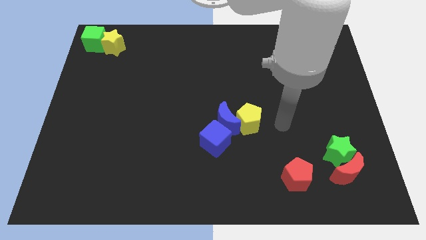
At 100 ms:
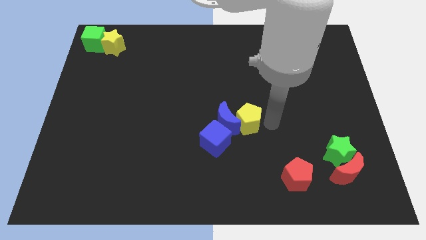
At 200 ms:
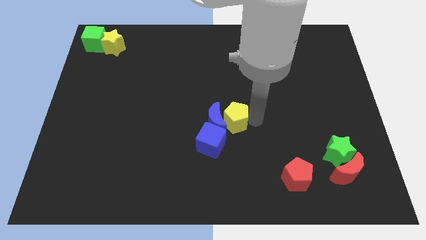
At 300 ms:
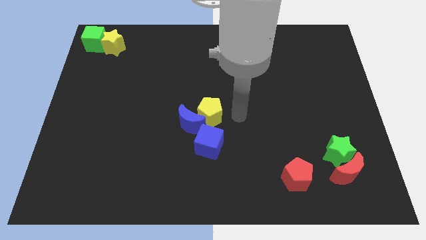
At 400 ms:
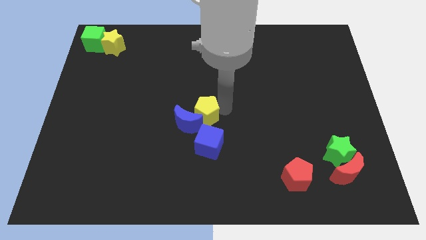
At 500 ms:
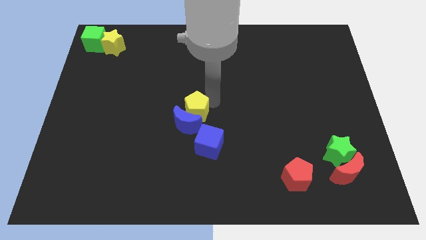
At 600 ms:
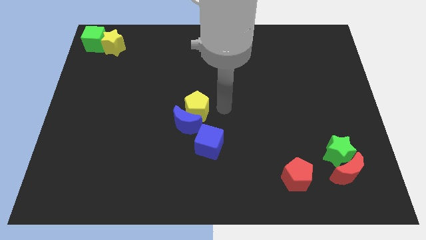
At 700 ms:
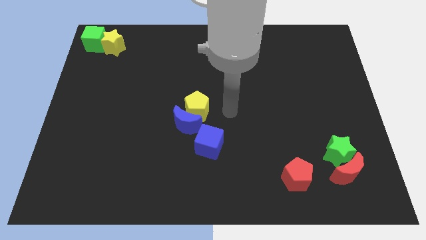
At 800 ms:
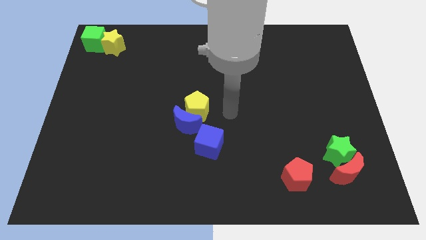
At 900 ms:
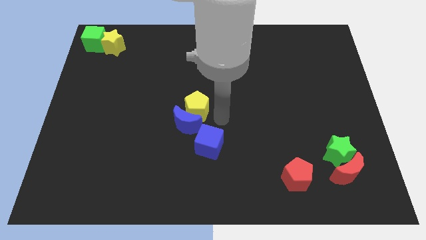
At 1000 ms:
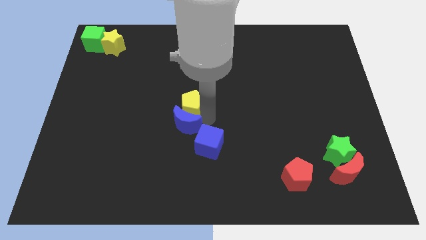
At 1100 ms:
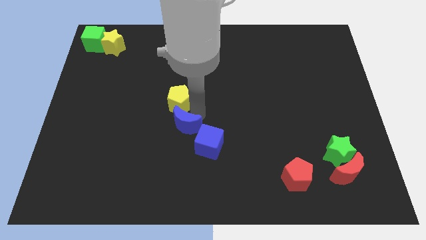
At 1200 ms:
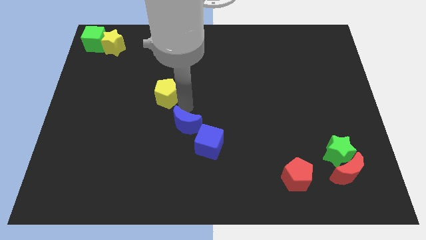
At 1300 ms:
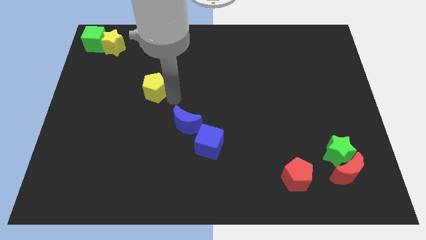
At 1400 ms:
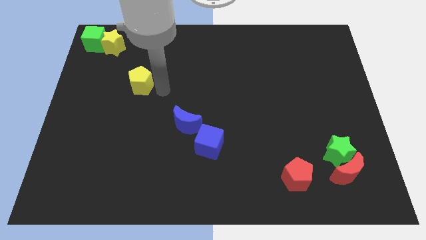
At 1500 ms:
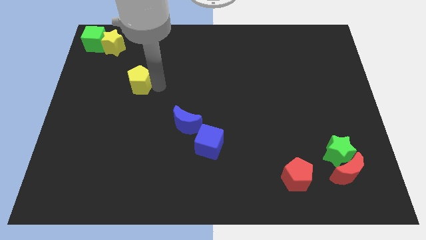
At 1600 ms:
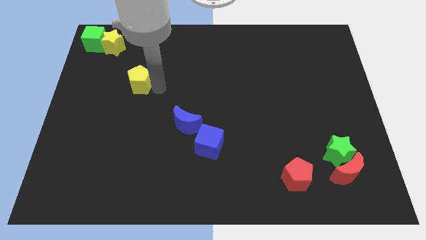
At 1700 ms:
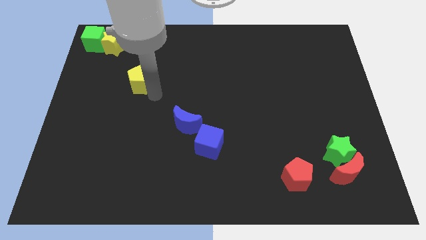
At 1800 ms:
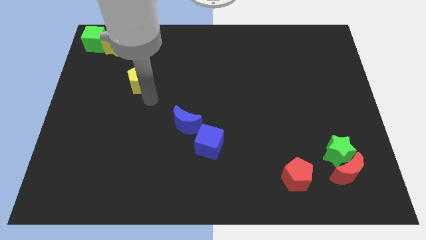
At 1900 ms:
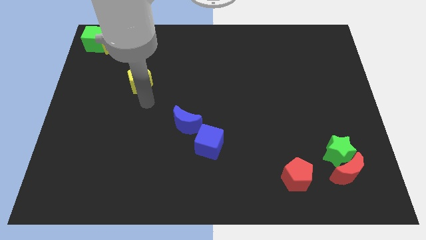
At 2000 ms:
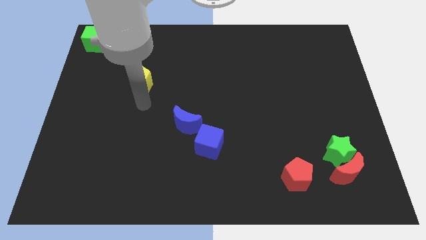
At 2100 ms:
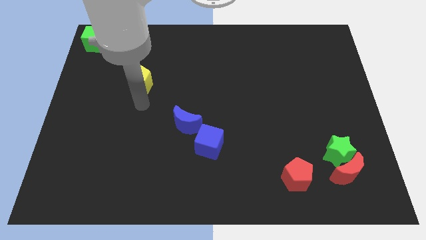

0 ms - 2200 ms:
move the yellow pentagon diagonal left of blue moon

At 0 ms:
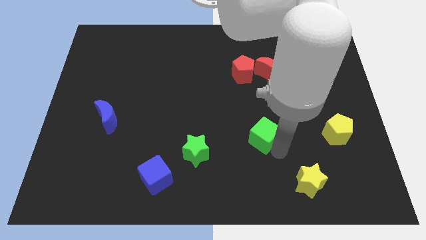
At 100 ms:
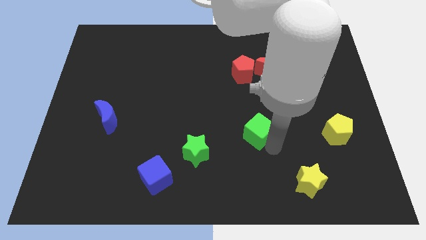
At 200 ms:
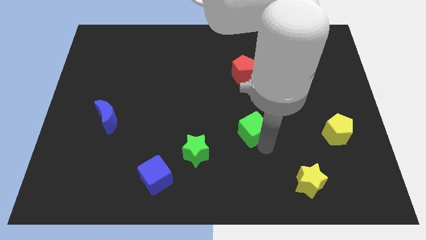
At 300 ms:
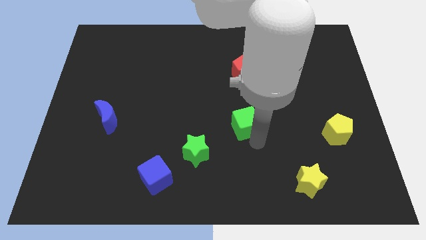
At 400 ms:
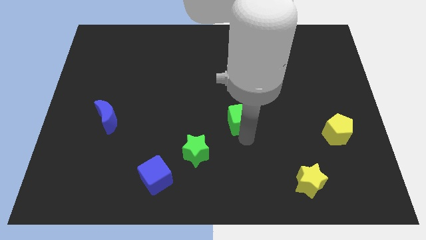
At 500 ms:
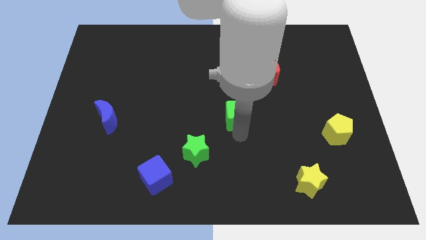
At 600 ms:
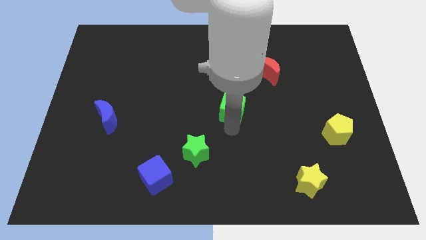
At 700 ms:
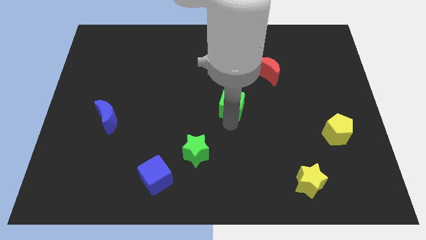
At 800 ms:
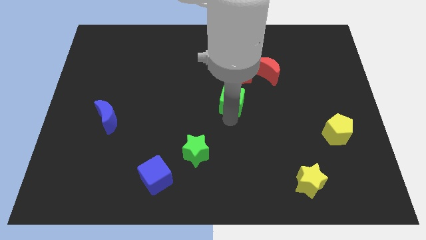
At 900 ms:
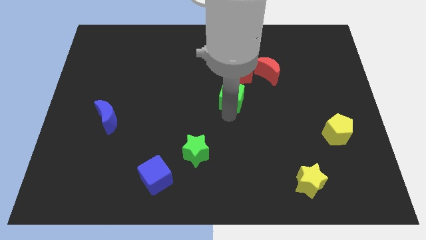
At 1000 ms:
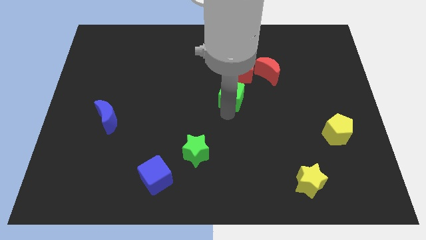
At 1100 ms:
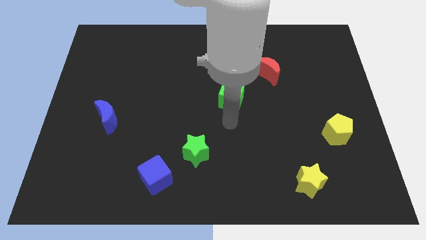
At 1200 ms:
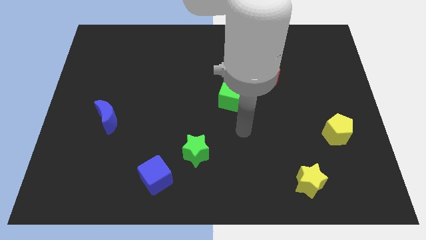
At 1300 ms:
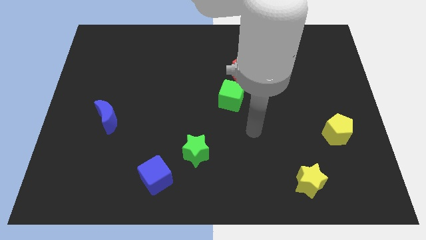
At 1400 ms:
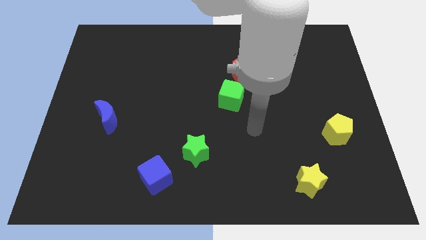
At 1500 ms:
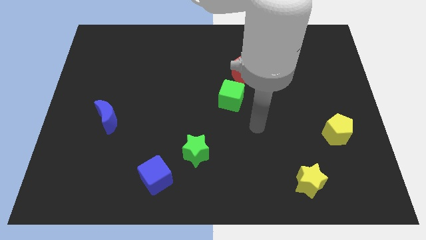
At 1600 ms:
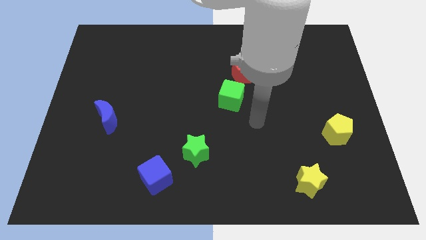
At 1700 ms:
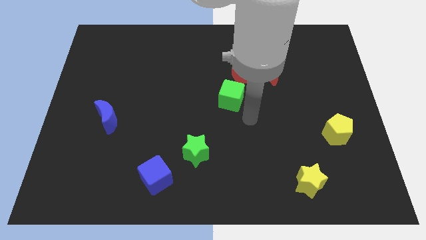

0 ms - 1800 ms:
slide the green cube to the bottom of the red pentagon

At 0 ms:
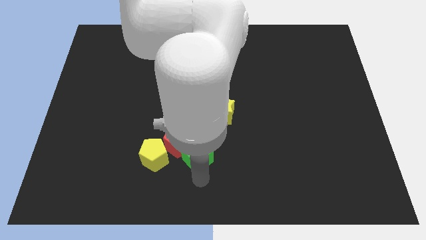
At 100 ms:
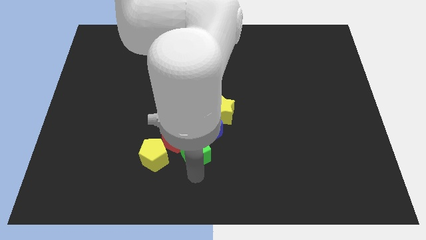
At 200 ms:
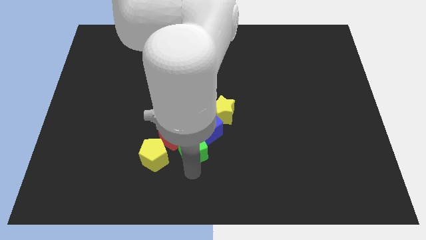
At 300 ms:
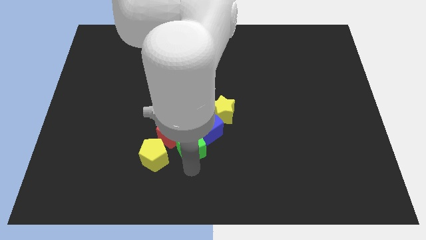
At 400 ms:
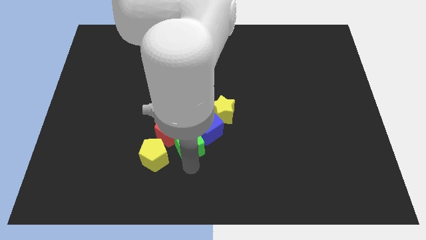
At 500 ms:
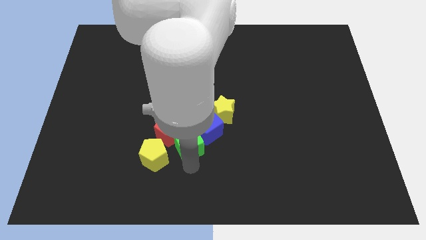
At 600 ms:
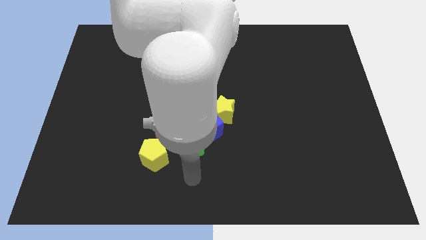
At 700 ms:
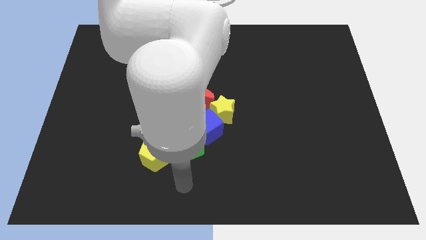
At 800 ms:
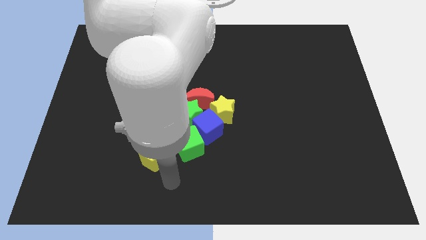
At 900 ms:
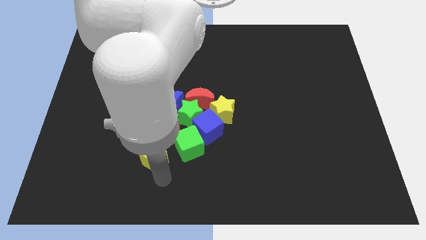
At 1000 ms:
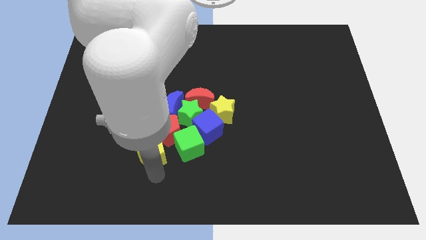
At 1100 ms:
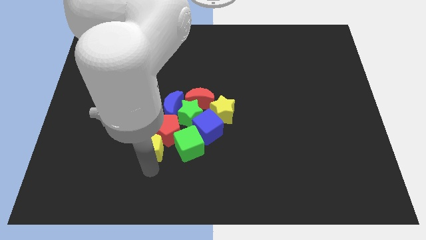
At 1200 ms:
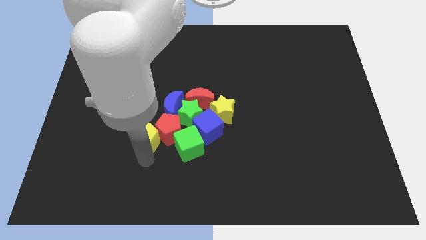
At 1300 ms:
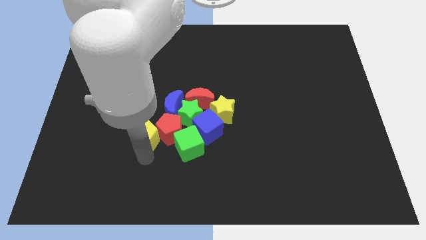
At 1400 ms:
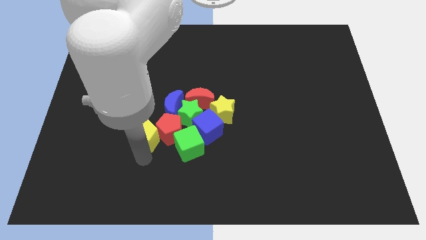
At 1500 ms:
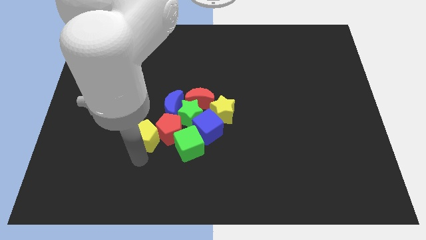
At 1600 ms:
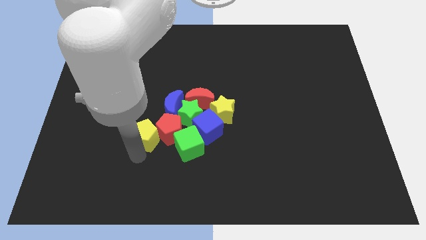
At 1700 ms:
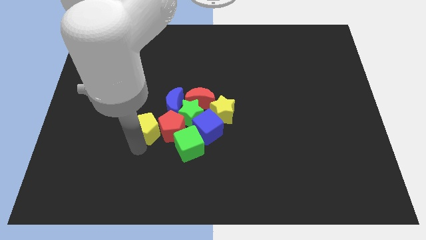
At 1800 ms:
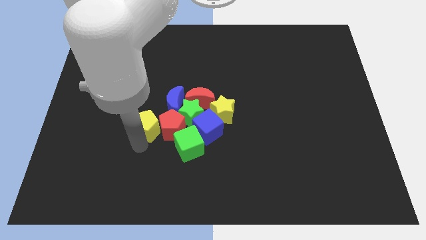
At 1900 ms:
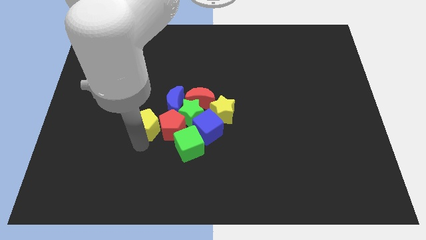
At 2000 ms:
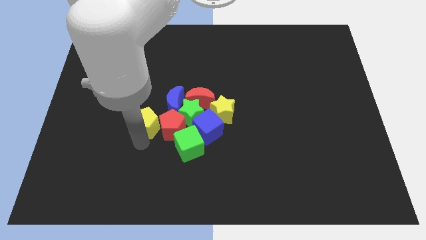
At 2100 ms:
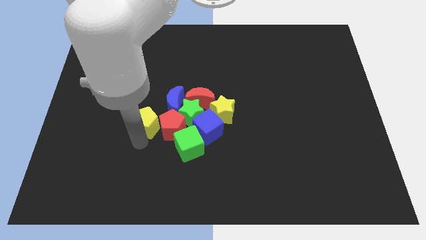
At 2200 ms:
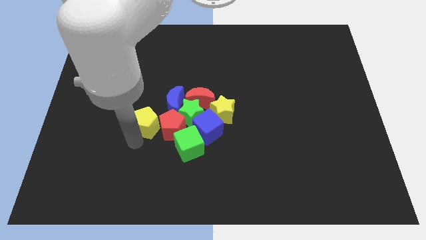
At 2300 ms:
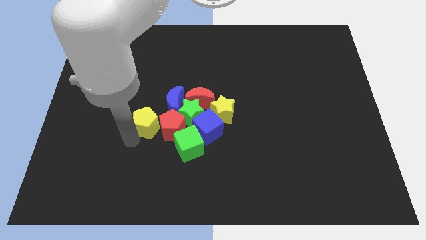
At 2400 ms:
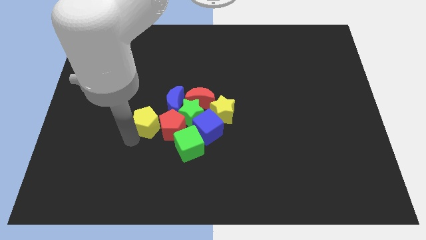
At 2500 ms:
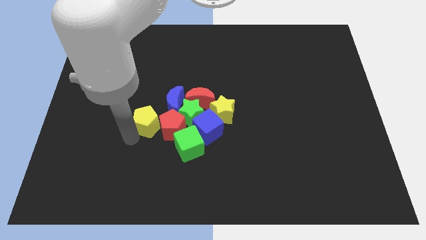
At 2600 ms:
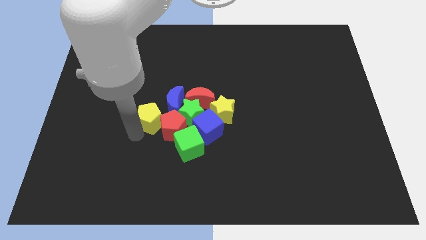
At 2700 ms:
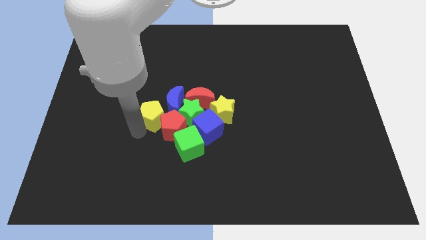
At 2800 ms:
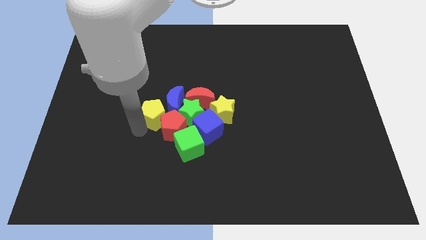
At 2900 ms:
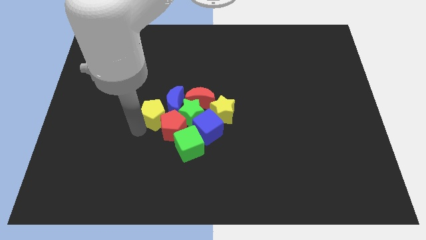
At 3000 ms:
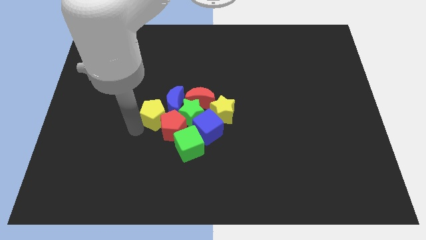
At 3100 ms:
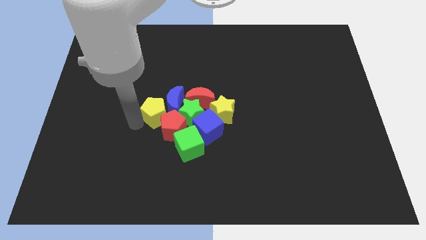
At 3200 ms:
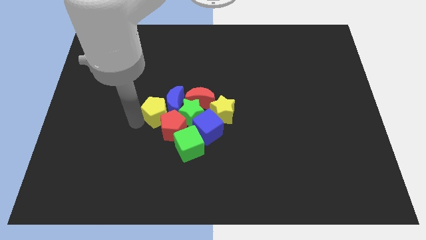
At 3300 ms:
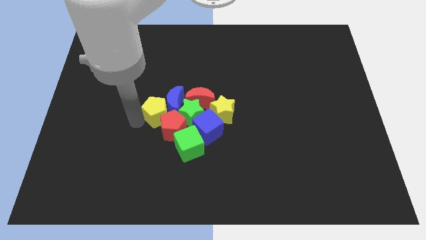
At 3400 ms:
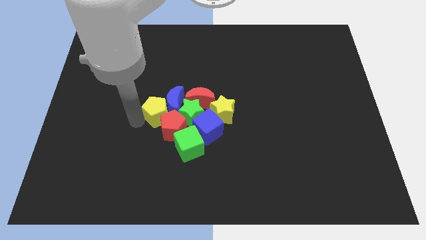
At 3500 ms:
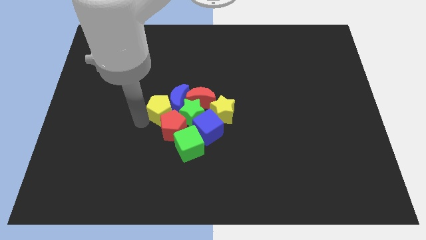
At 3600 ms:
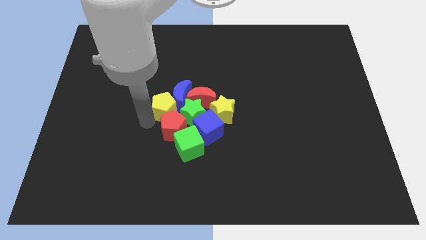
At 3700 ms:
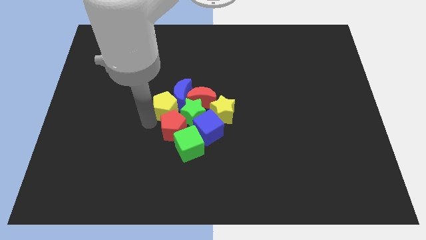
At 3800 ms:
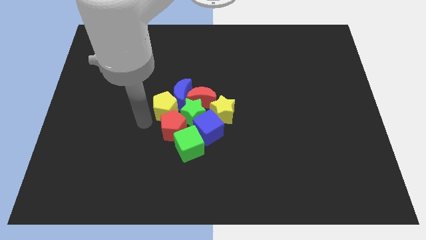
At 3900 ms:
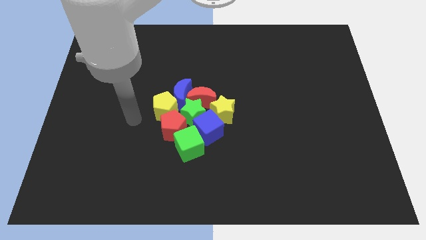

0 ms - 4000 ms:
push the yellow pentagon into the group of blocks

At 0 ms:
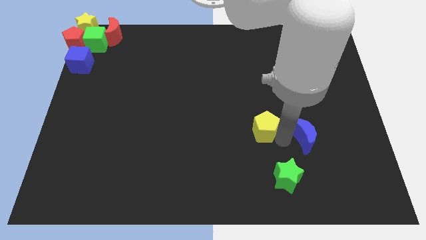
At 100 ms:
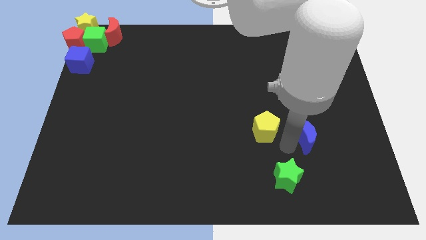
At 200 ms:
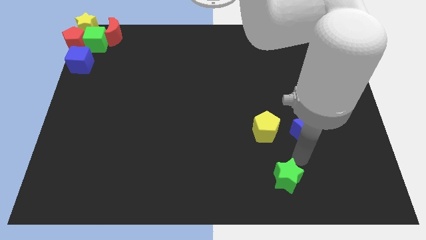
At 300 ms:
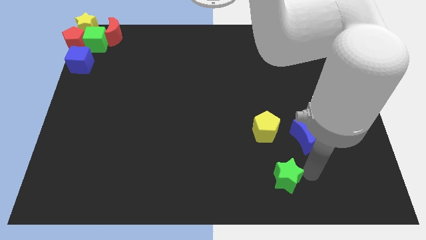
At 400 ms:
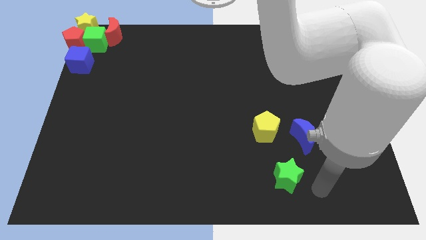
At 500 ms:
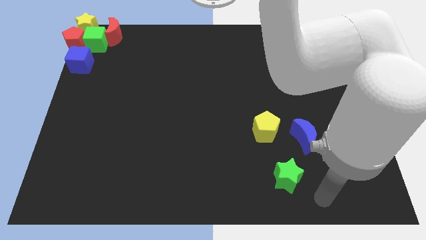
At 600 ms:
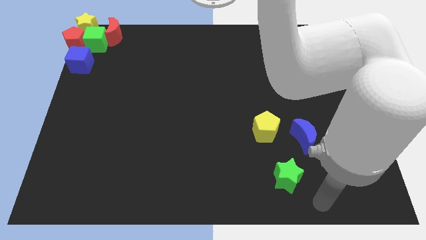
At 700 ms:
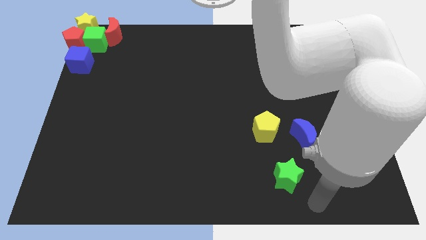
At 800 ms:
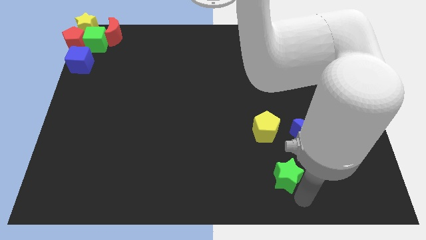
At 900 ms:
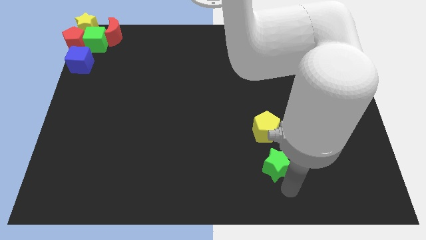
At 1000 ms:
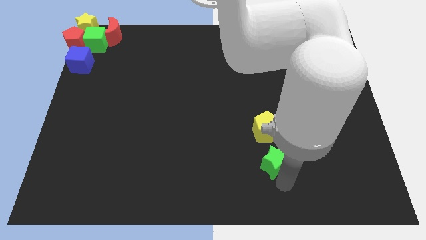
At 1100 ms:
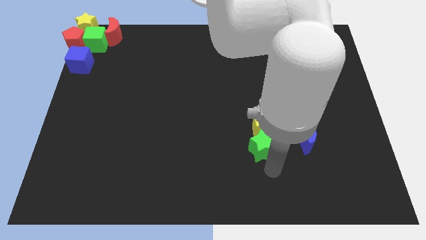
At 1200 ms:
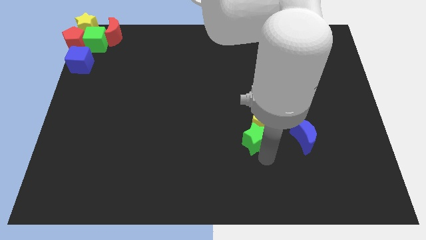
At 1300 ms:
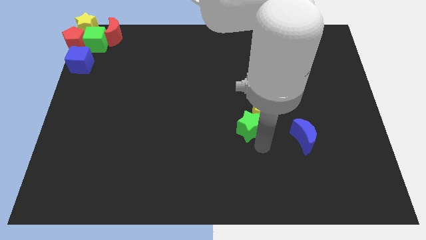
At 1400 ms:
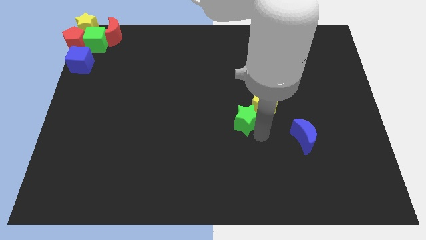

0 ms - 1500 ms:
move the green star into the yellow pentagon
